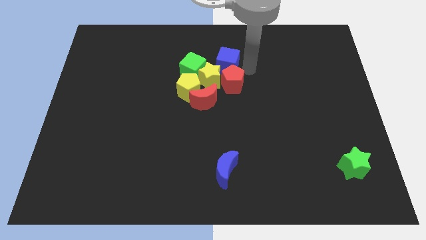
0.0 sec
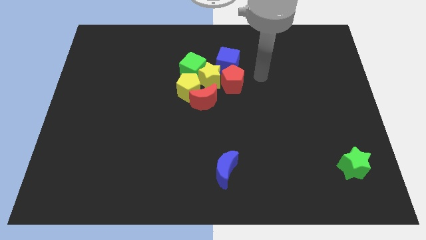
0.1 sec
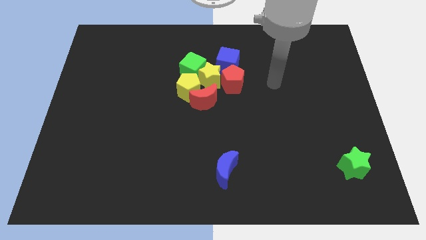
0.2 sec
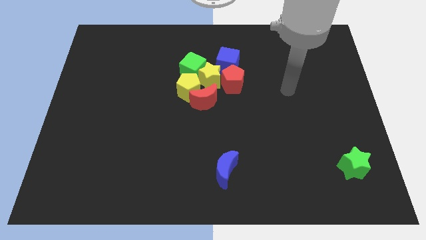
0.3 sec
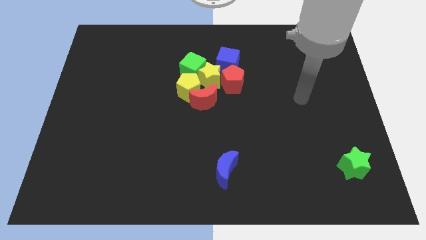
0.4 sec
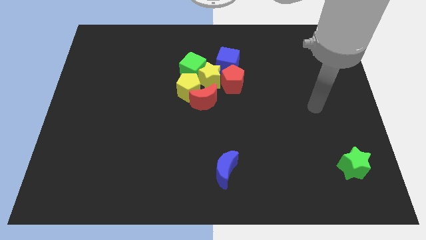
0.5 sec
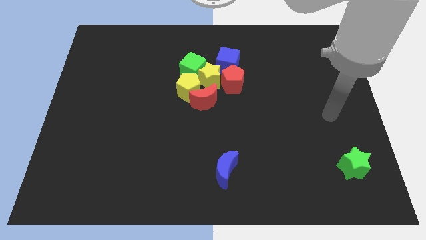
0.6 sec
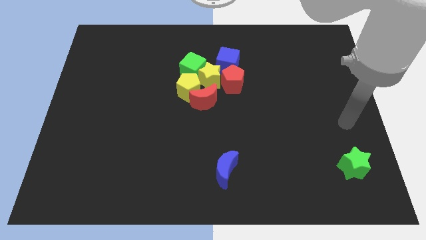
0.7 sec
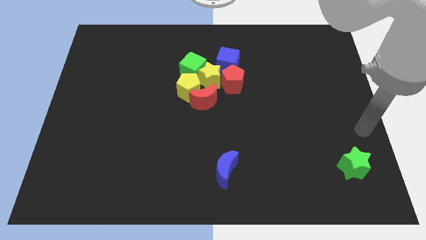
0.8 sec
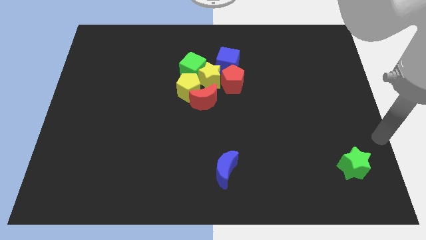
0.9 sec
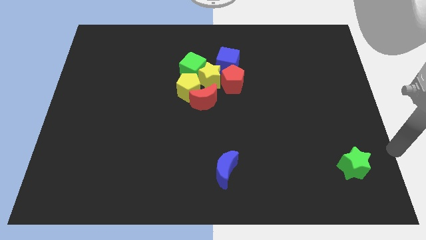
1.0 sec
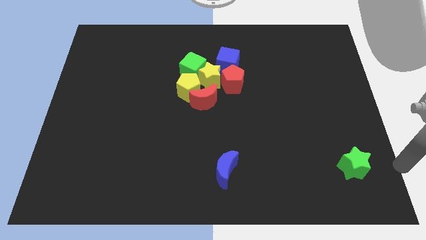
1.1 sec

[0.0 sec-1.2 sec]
place your hand parallel right to the blue moon

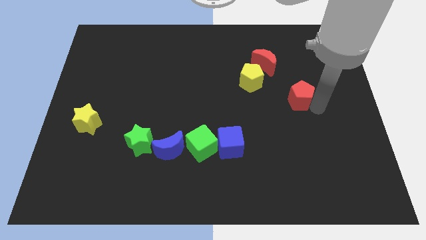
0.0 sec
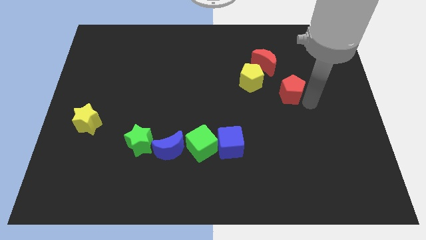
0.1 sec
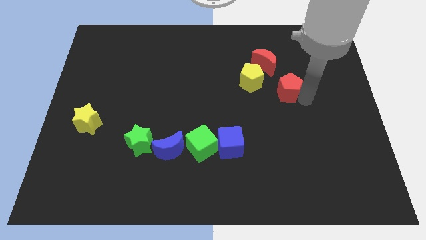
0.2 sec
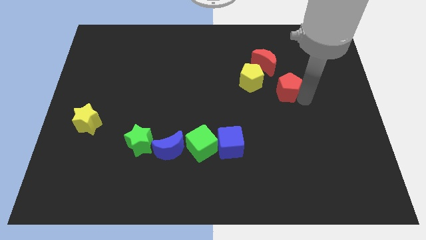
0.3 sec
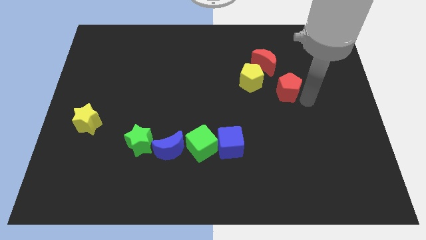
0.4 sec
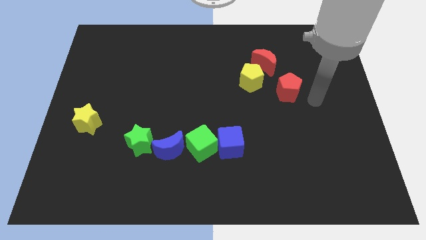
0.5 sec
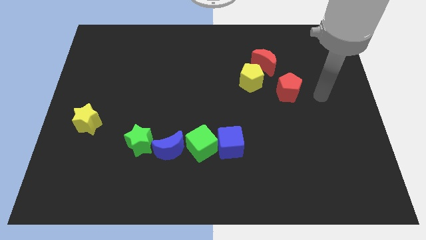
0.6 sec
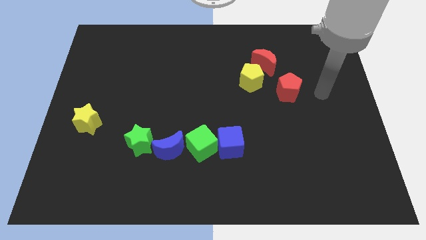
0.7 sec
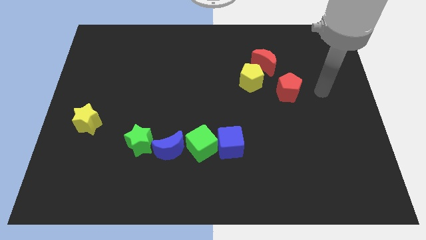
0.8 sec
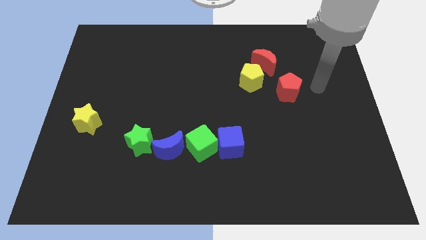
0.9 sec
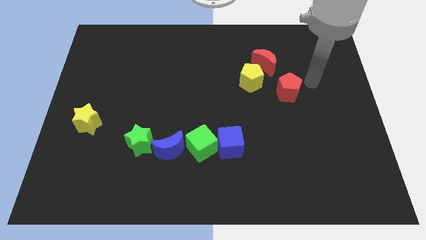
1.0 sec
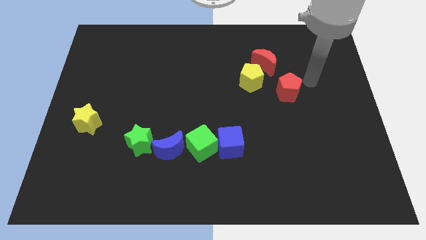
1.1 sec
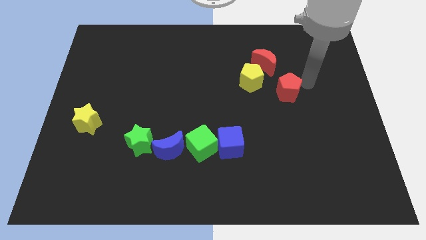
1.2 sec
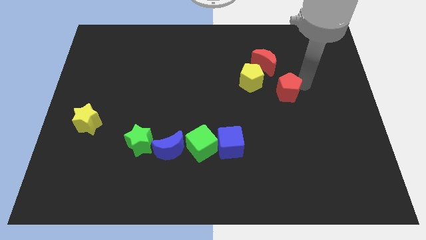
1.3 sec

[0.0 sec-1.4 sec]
push red pentagon slightly to the left

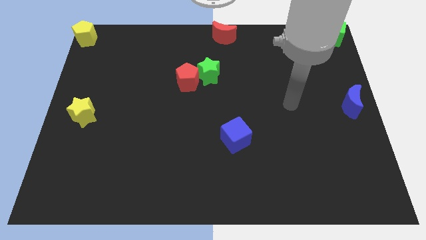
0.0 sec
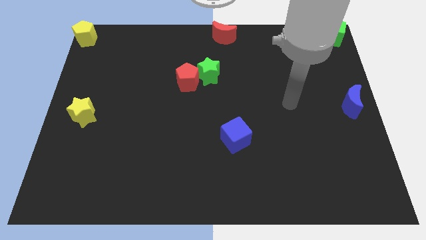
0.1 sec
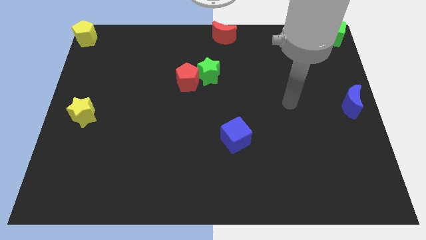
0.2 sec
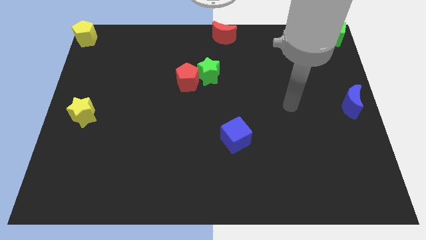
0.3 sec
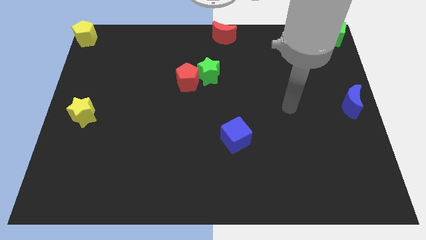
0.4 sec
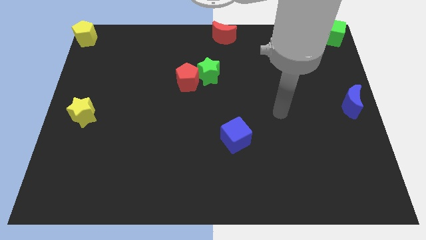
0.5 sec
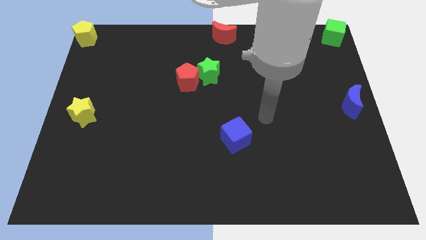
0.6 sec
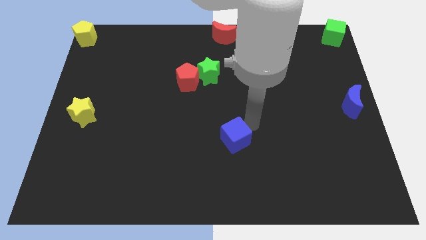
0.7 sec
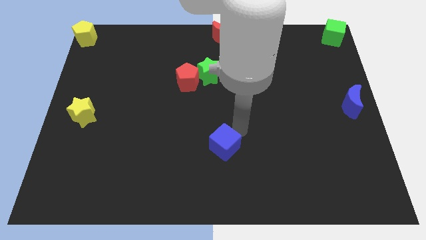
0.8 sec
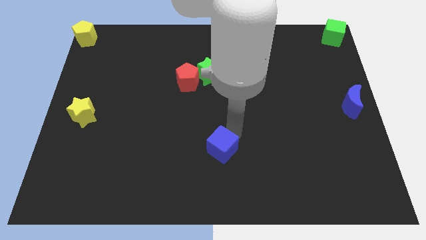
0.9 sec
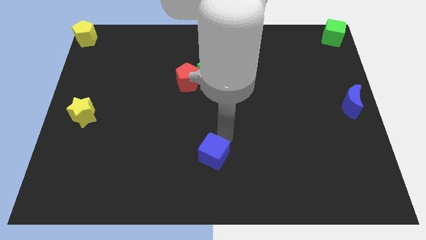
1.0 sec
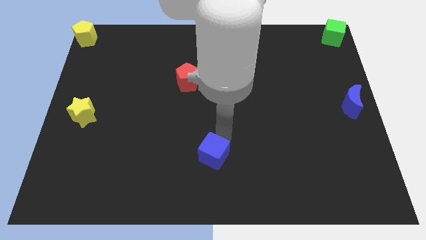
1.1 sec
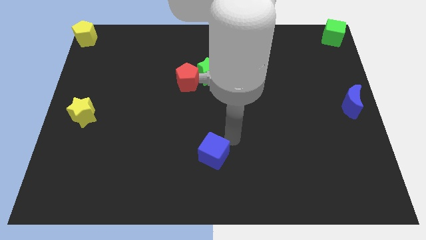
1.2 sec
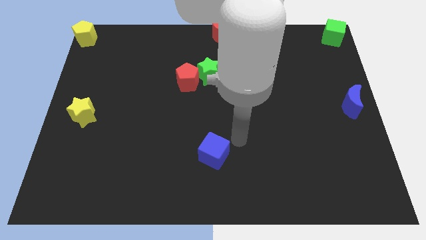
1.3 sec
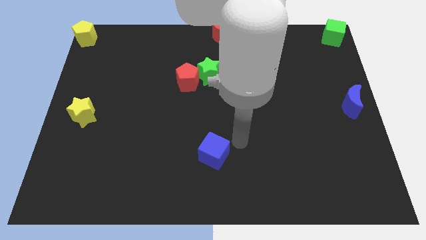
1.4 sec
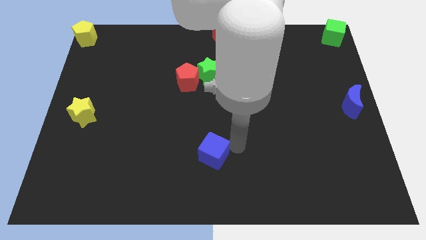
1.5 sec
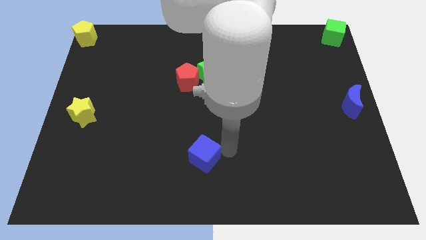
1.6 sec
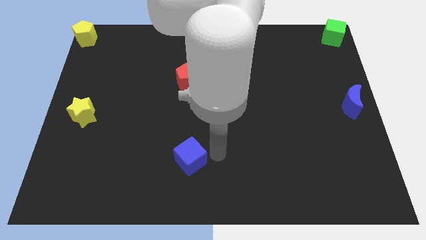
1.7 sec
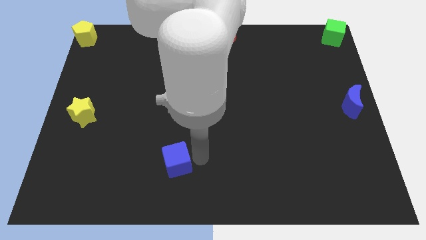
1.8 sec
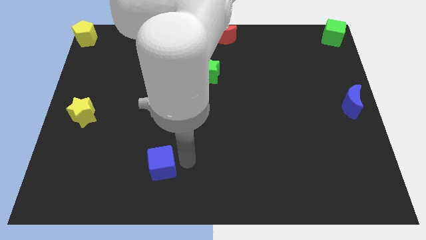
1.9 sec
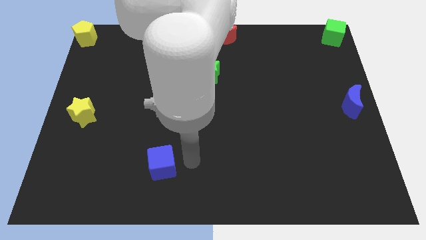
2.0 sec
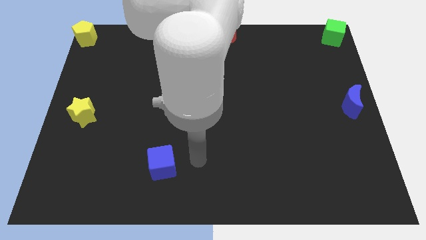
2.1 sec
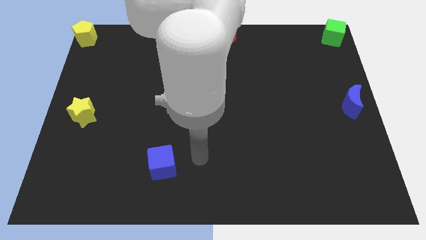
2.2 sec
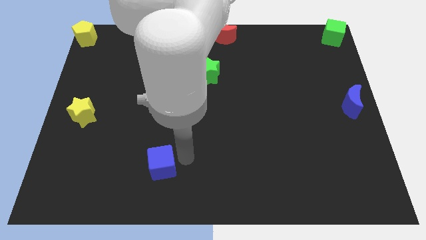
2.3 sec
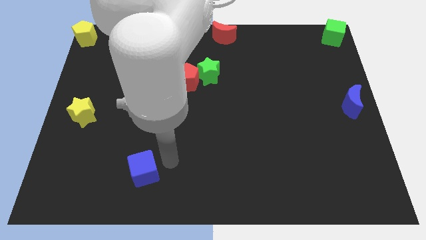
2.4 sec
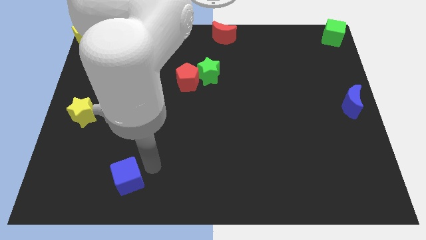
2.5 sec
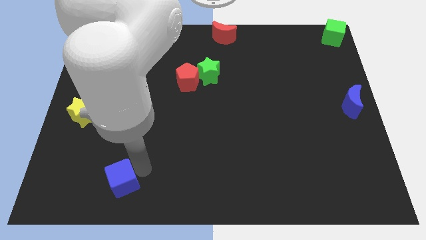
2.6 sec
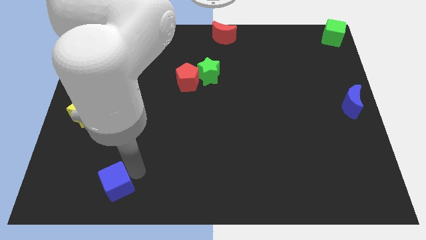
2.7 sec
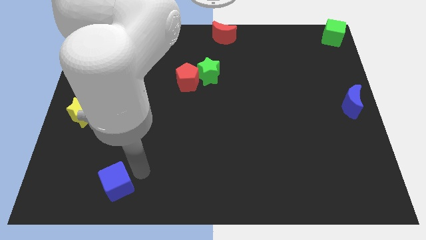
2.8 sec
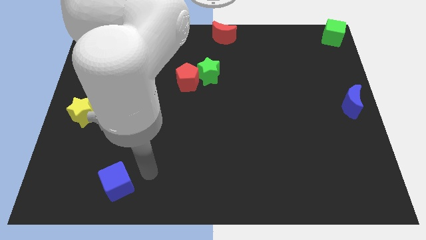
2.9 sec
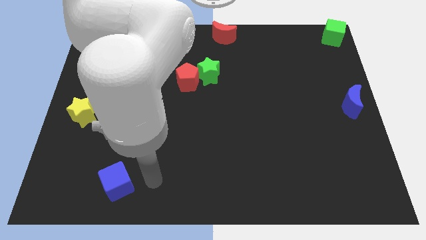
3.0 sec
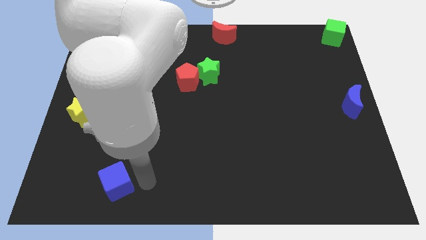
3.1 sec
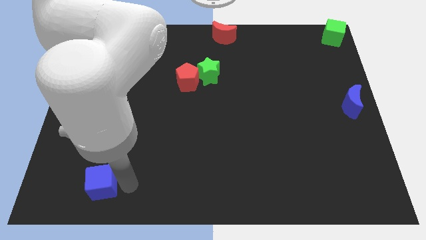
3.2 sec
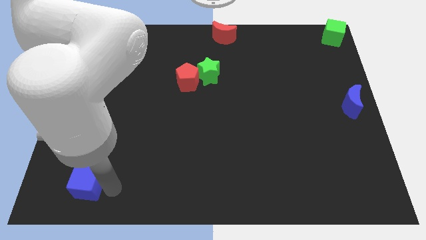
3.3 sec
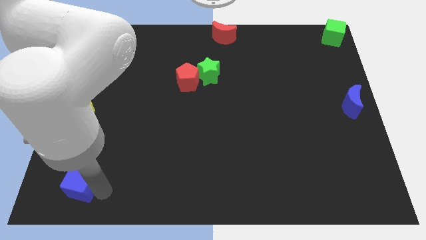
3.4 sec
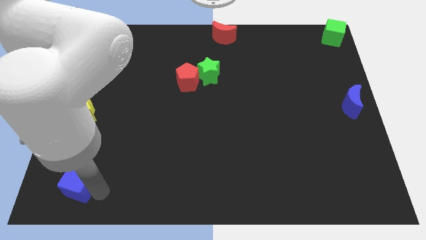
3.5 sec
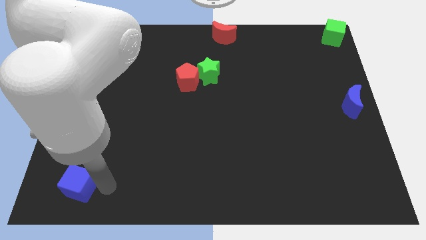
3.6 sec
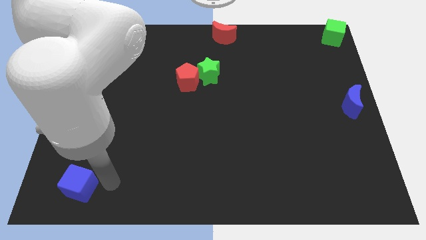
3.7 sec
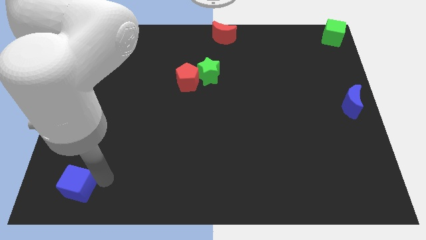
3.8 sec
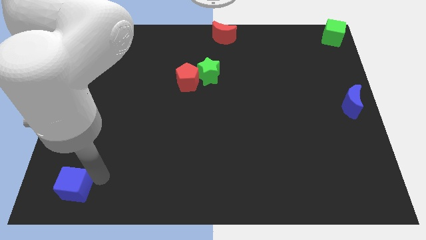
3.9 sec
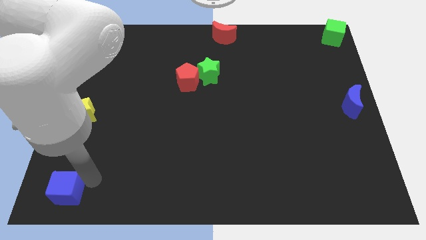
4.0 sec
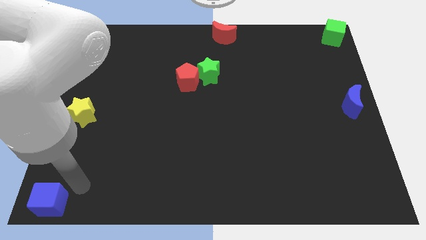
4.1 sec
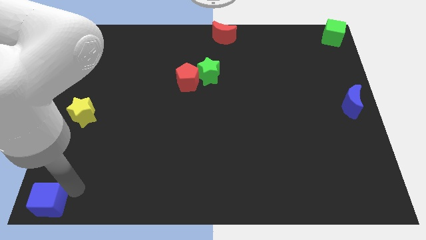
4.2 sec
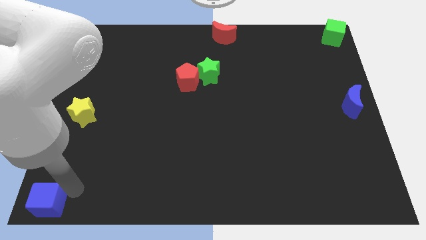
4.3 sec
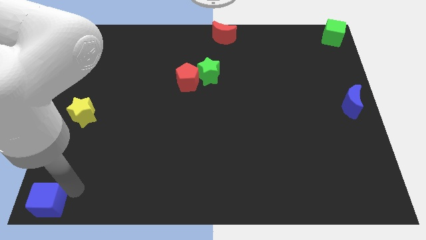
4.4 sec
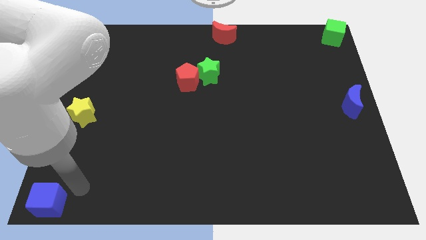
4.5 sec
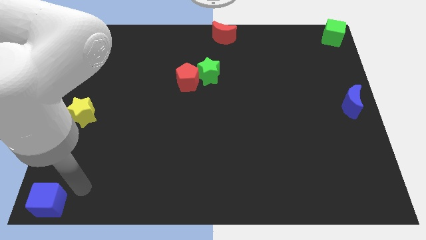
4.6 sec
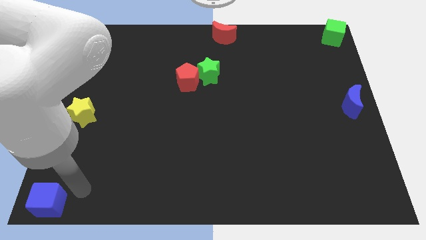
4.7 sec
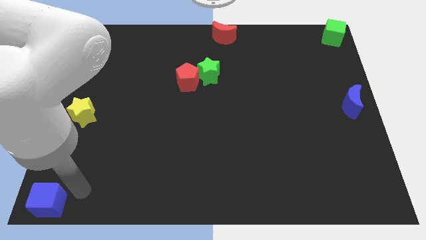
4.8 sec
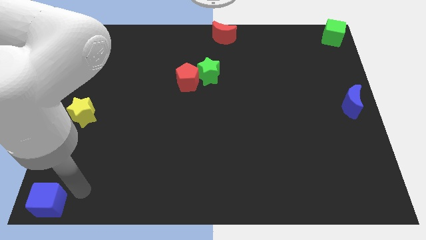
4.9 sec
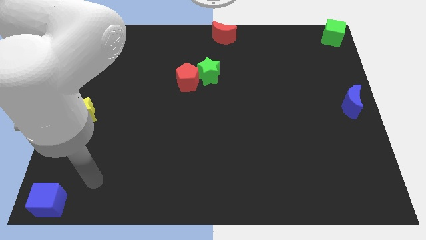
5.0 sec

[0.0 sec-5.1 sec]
slide the blue cube to the bottom left corner

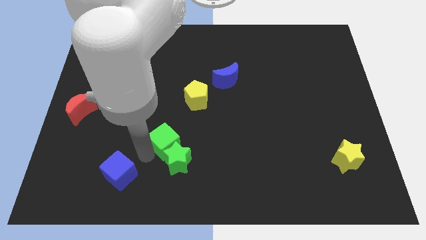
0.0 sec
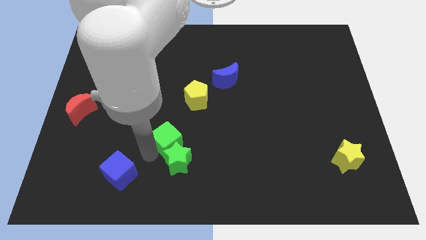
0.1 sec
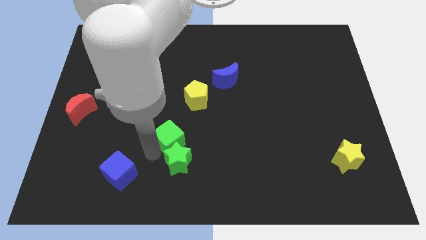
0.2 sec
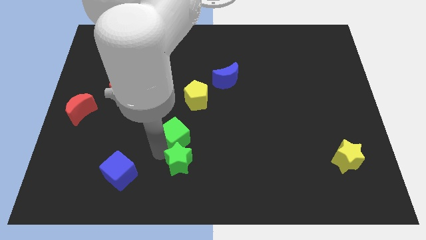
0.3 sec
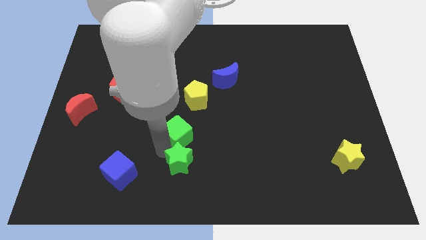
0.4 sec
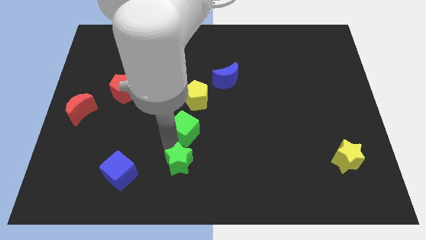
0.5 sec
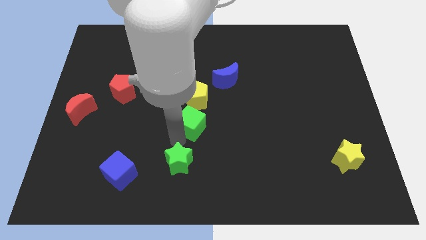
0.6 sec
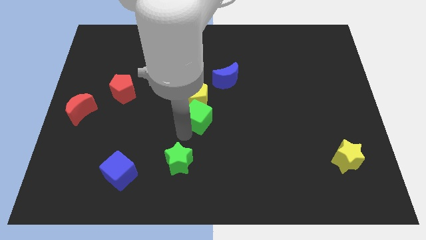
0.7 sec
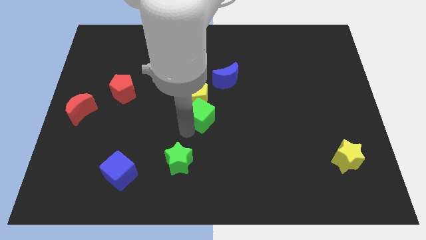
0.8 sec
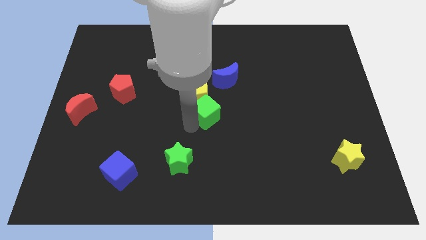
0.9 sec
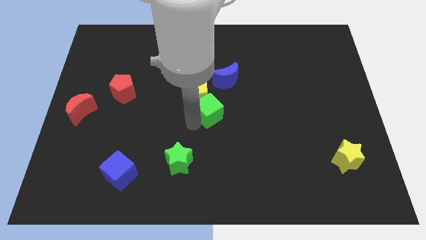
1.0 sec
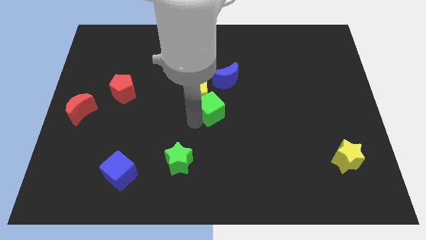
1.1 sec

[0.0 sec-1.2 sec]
place the green cube to the right of the yellow pentagon
